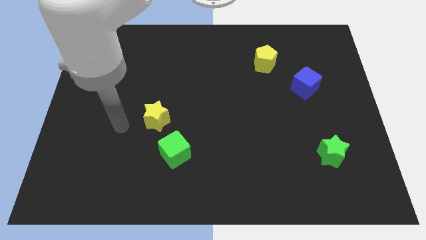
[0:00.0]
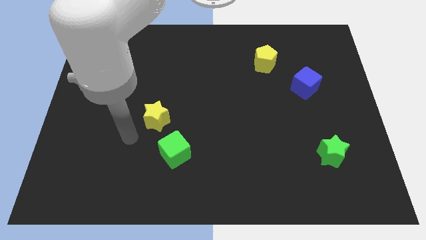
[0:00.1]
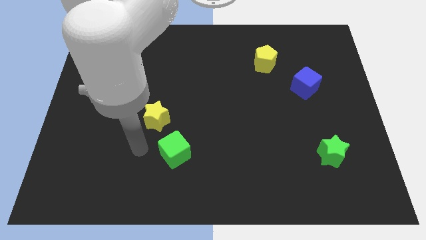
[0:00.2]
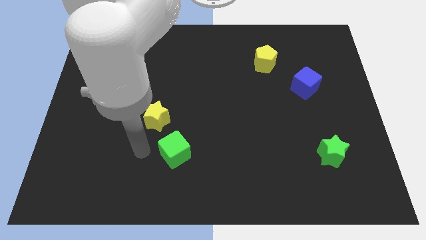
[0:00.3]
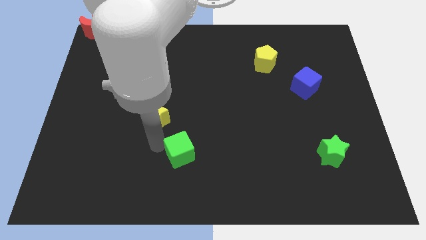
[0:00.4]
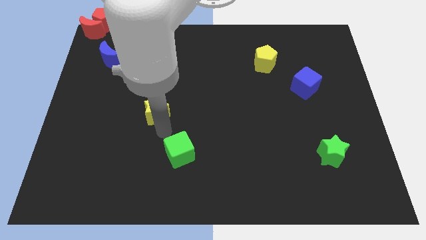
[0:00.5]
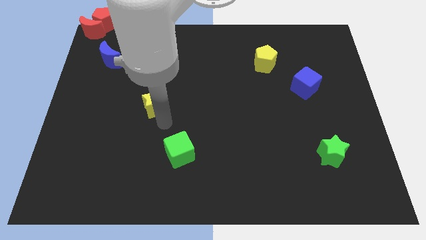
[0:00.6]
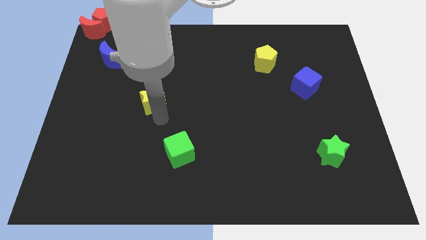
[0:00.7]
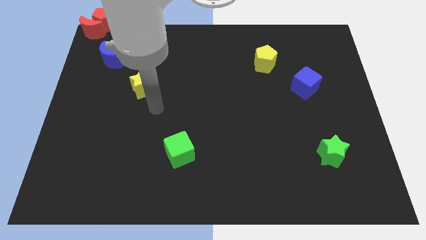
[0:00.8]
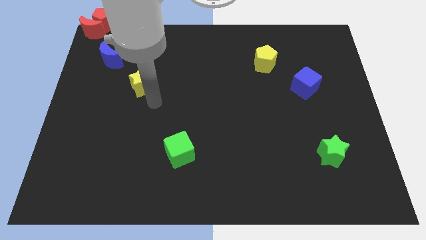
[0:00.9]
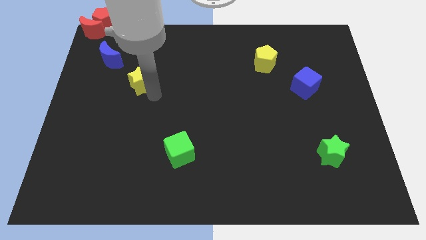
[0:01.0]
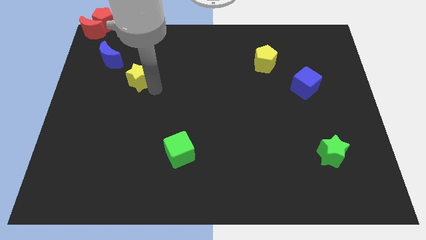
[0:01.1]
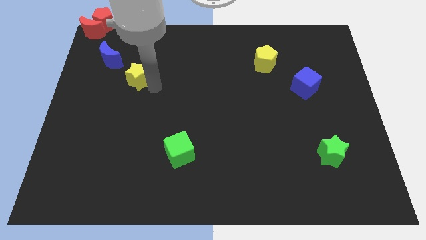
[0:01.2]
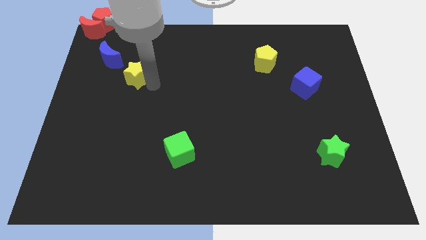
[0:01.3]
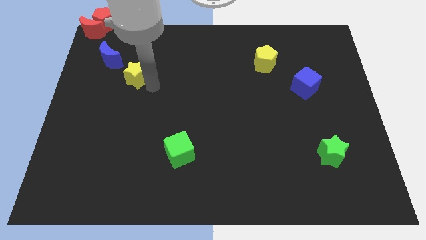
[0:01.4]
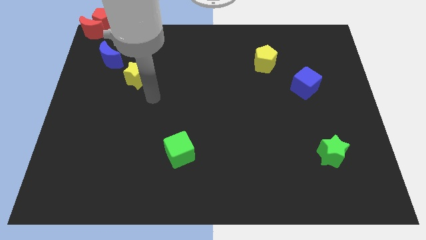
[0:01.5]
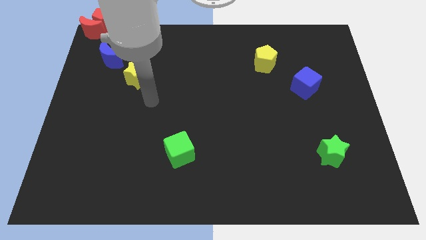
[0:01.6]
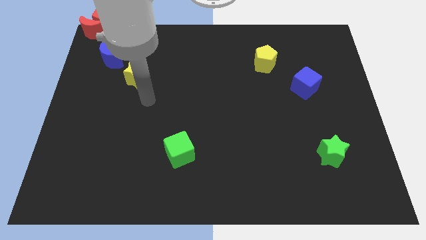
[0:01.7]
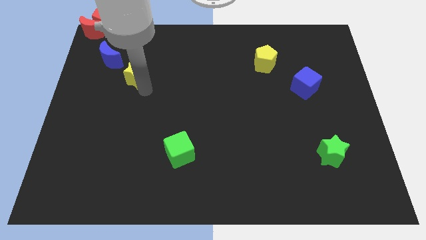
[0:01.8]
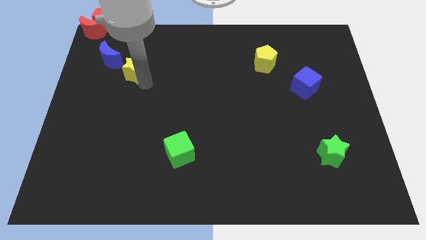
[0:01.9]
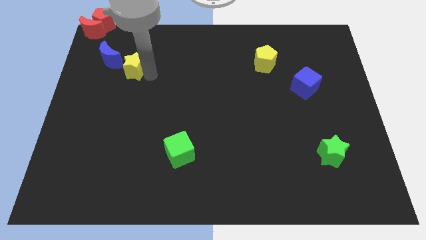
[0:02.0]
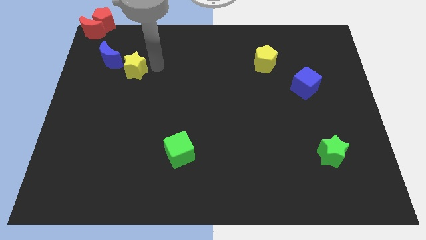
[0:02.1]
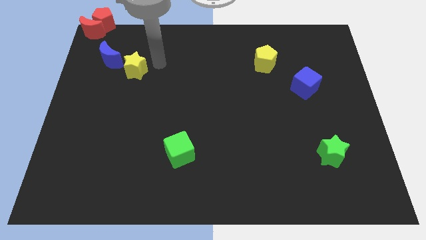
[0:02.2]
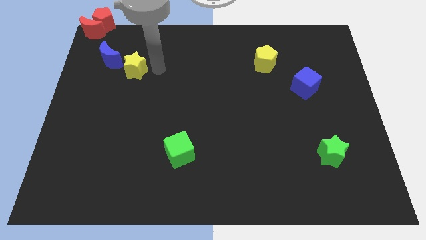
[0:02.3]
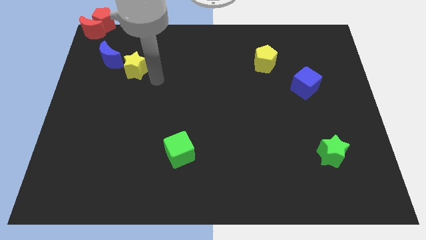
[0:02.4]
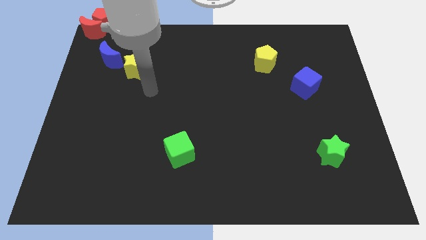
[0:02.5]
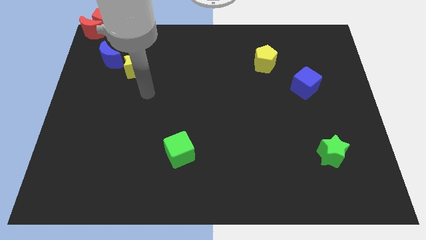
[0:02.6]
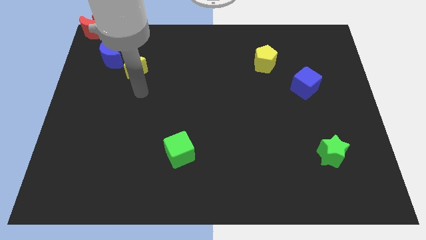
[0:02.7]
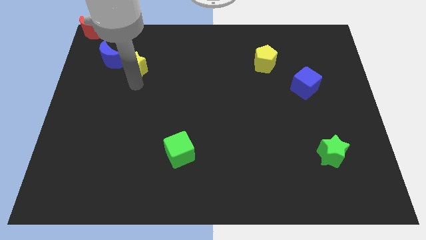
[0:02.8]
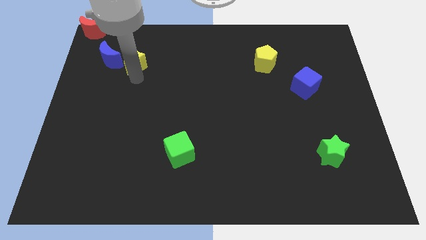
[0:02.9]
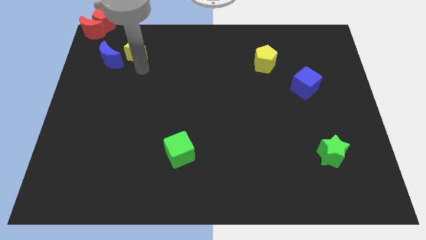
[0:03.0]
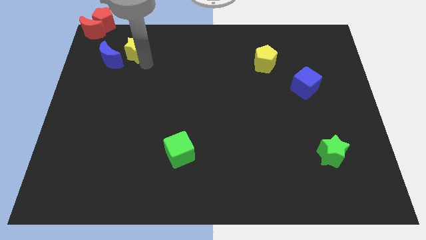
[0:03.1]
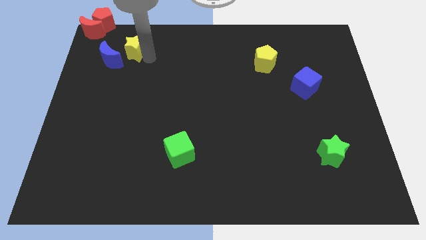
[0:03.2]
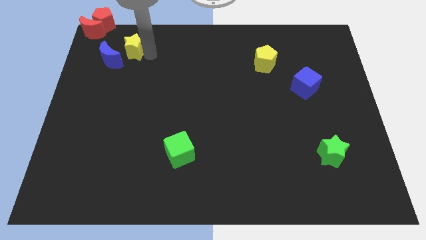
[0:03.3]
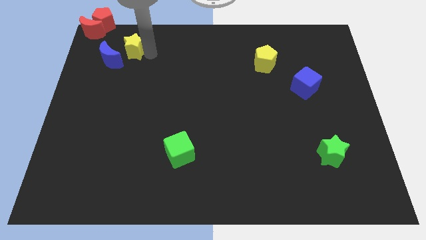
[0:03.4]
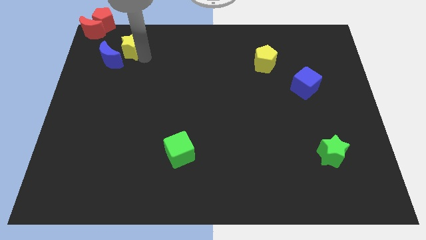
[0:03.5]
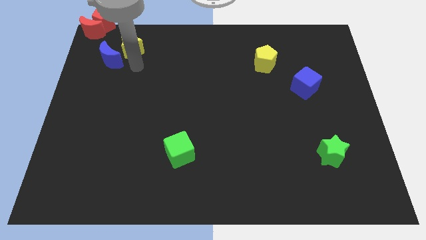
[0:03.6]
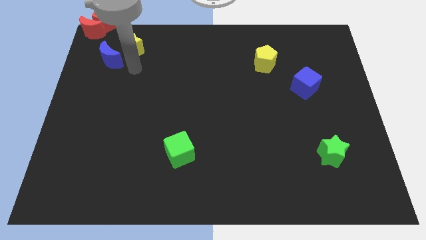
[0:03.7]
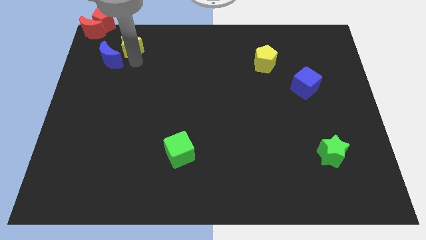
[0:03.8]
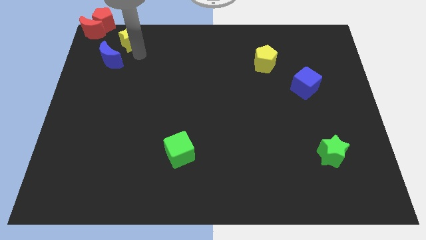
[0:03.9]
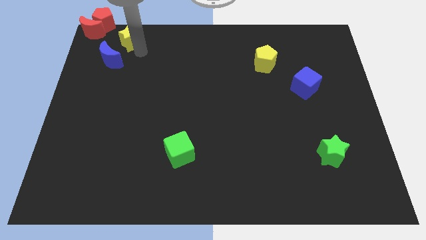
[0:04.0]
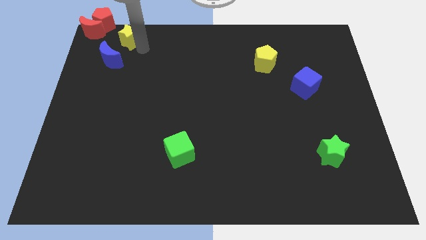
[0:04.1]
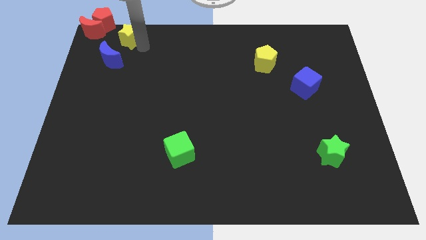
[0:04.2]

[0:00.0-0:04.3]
push the yellow star to the top

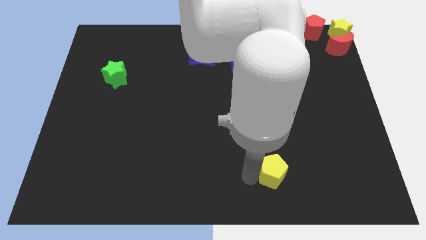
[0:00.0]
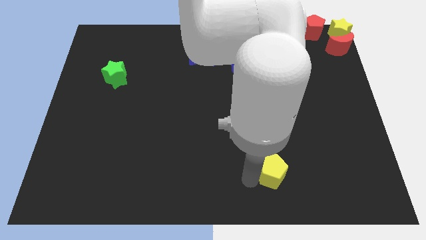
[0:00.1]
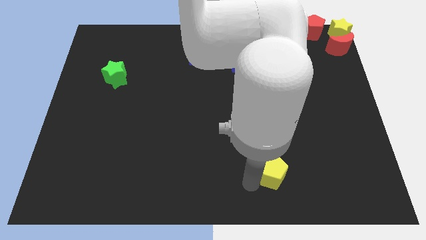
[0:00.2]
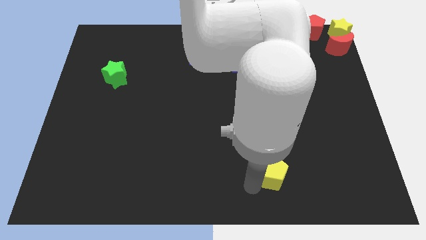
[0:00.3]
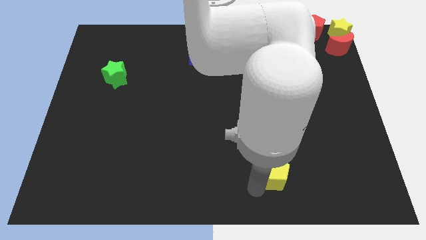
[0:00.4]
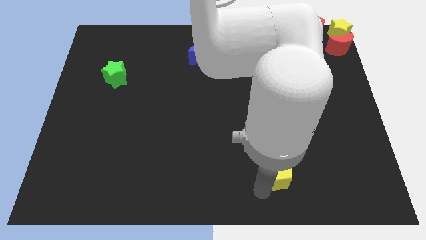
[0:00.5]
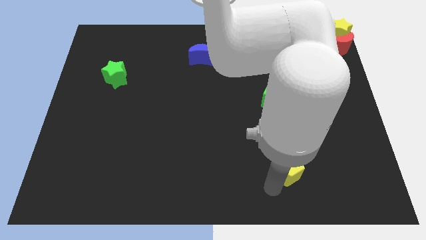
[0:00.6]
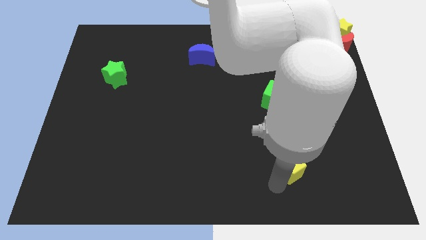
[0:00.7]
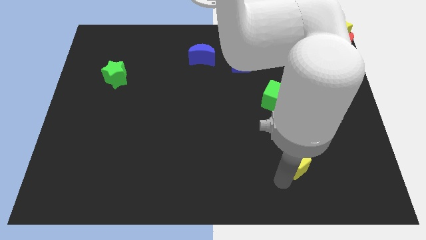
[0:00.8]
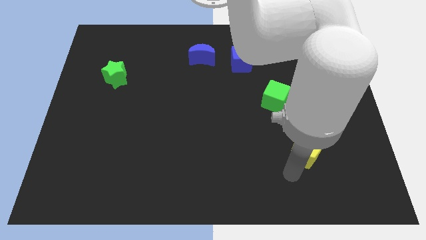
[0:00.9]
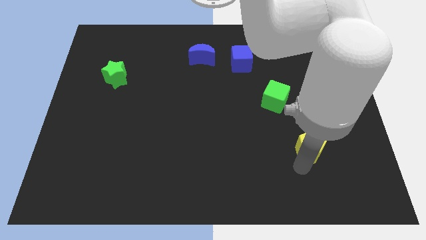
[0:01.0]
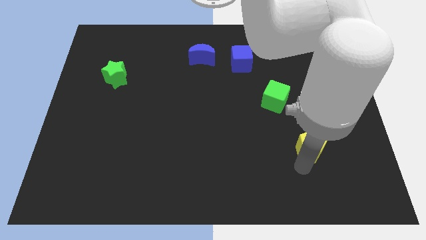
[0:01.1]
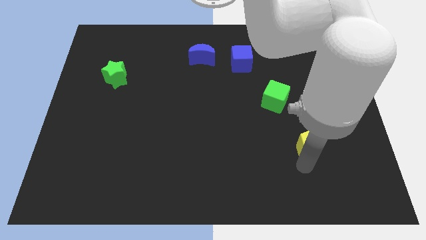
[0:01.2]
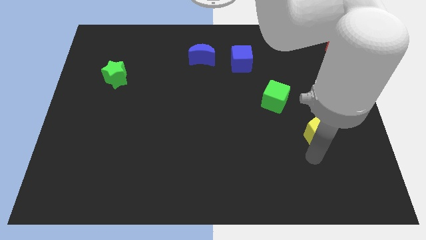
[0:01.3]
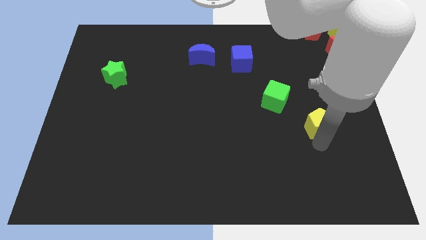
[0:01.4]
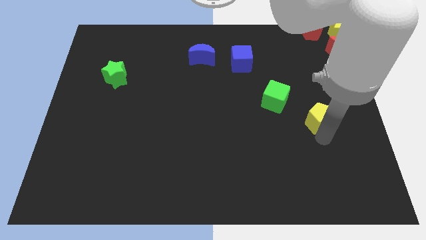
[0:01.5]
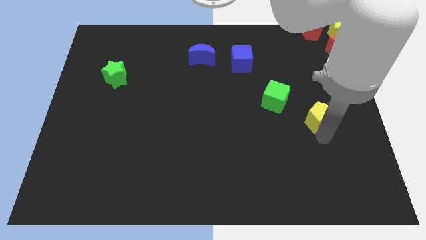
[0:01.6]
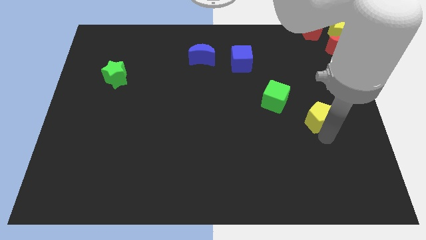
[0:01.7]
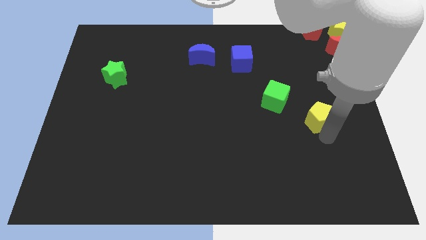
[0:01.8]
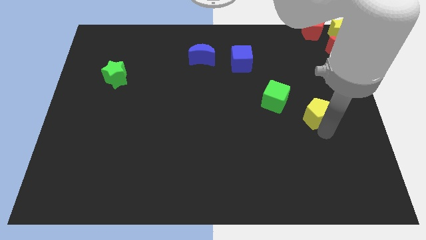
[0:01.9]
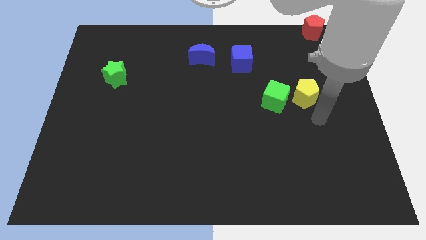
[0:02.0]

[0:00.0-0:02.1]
slide yellow pentagon to the right of green cube

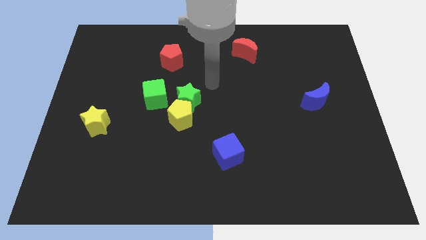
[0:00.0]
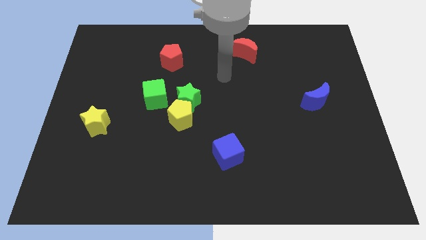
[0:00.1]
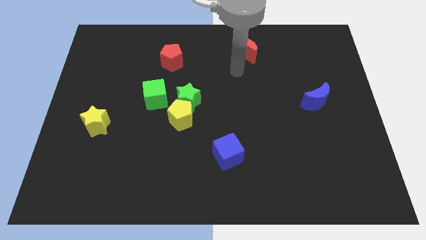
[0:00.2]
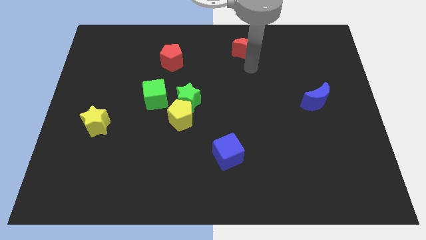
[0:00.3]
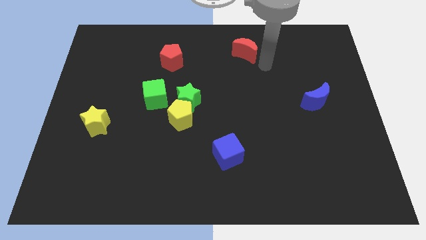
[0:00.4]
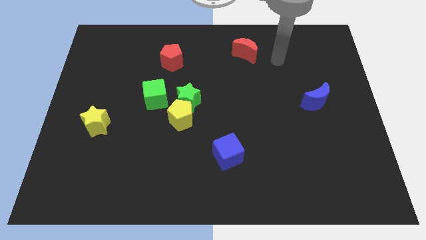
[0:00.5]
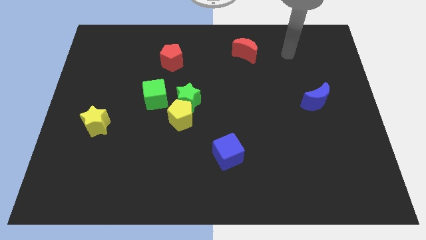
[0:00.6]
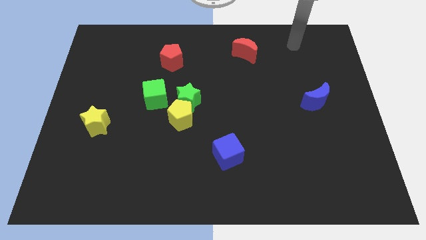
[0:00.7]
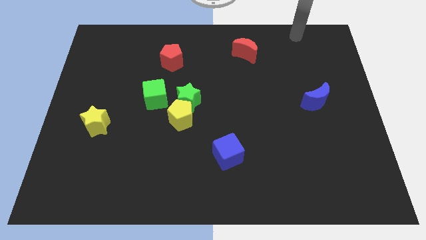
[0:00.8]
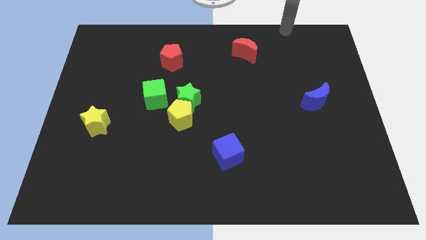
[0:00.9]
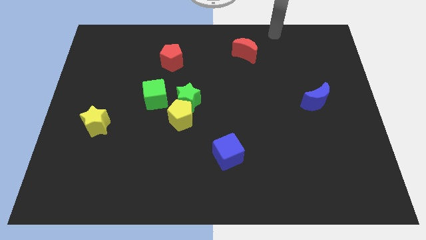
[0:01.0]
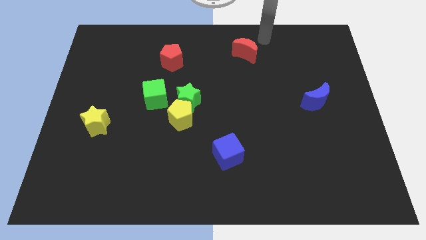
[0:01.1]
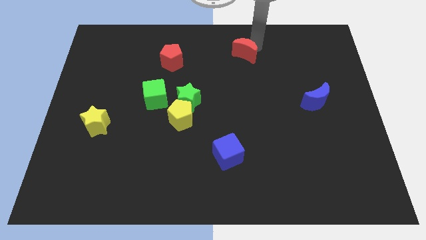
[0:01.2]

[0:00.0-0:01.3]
place your arm to the top of red moon

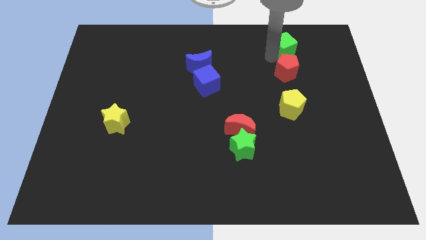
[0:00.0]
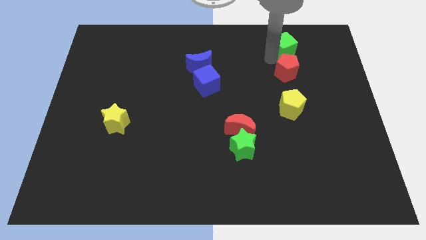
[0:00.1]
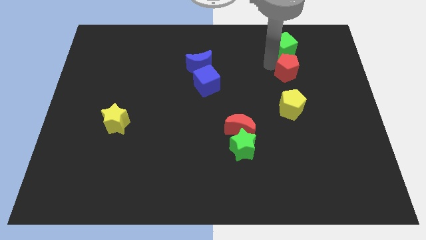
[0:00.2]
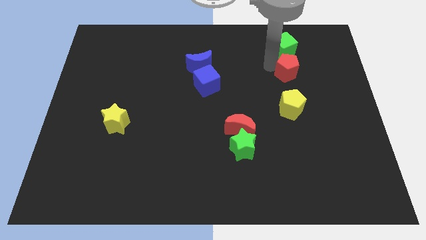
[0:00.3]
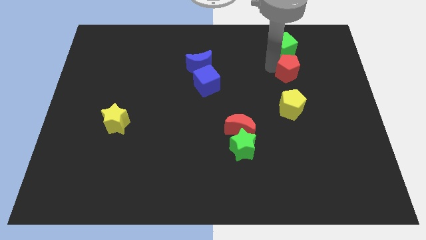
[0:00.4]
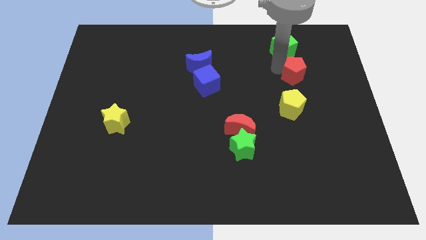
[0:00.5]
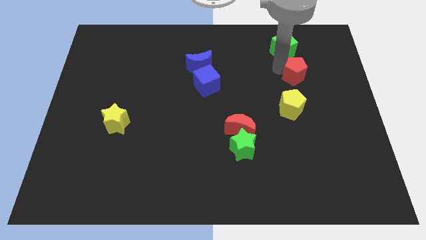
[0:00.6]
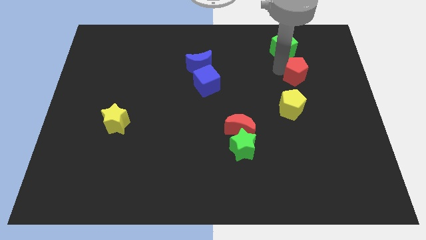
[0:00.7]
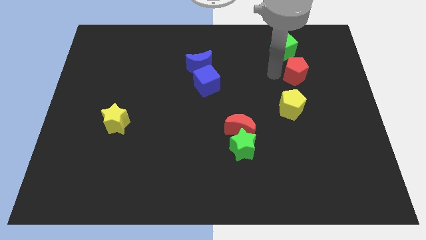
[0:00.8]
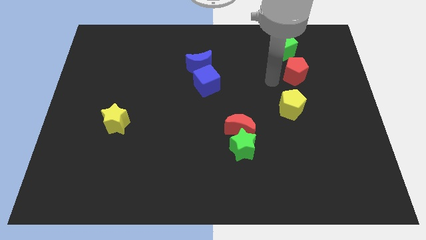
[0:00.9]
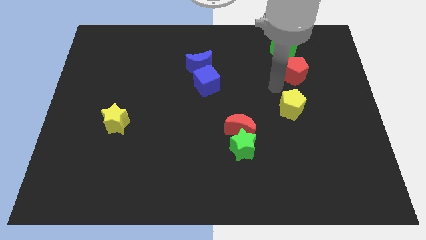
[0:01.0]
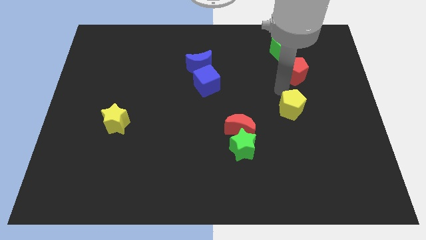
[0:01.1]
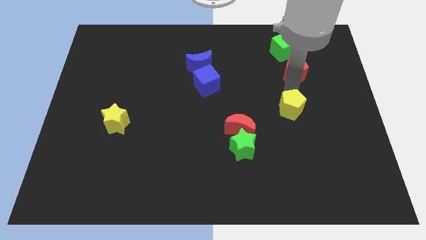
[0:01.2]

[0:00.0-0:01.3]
adjust the red pentagon
